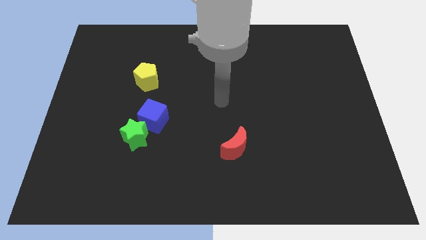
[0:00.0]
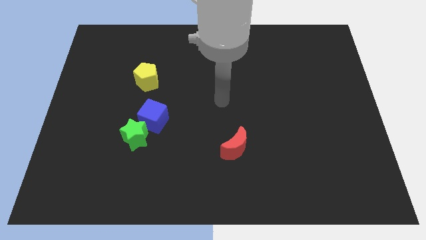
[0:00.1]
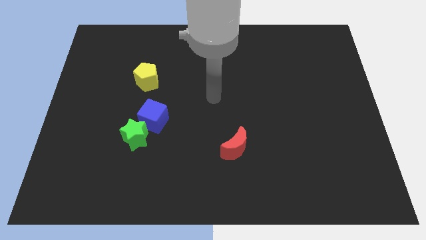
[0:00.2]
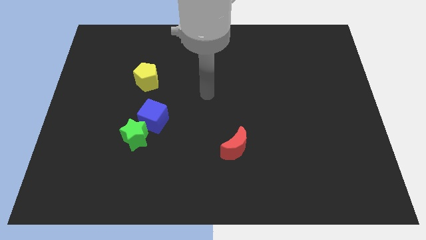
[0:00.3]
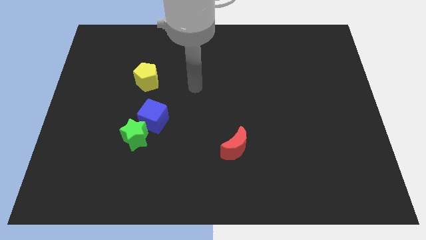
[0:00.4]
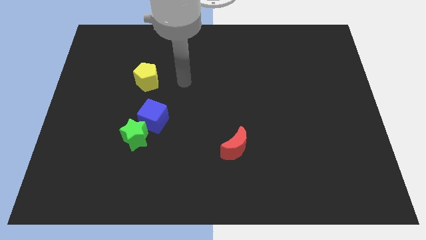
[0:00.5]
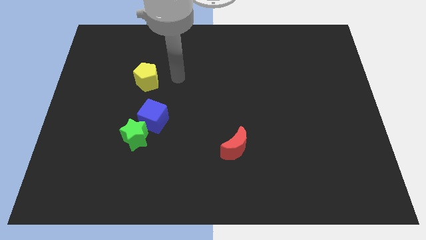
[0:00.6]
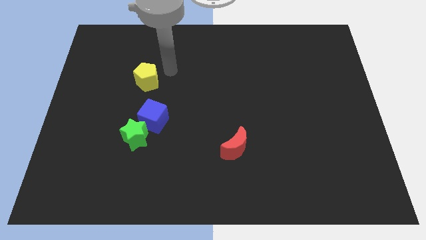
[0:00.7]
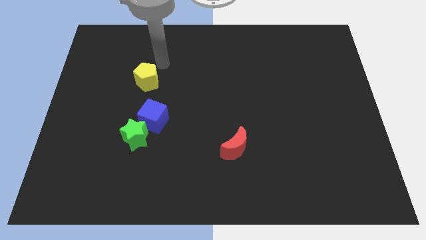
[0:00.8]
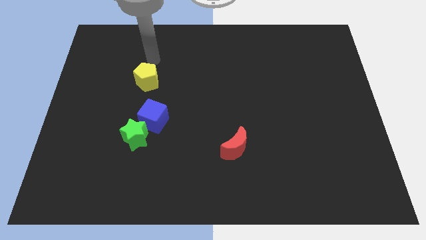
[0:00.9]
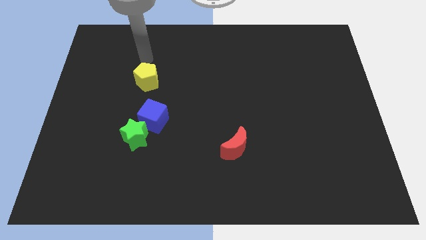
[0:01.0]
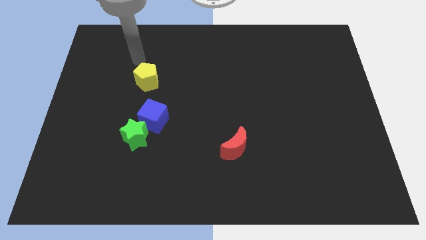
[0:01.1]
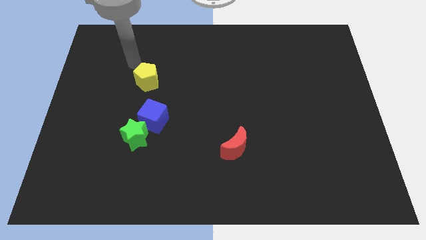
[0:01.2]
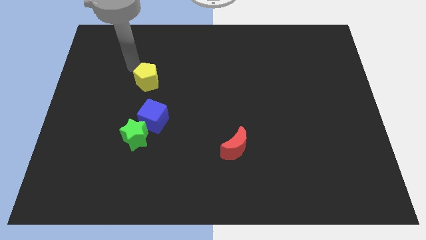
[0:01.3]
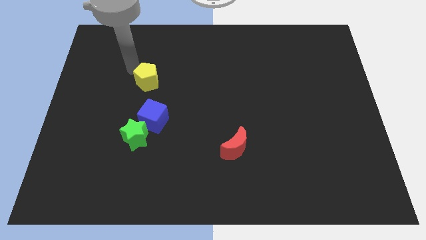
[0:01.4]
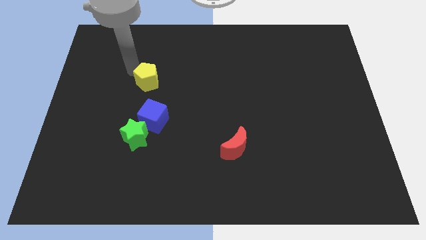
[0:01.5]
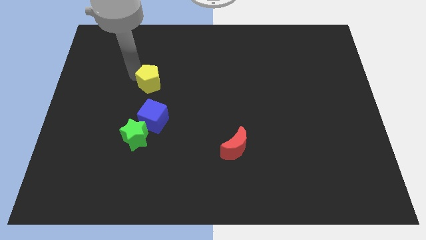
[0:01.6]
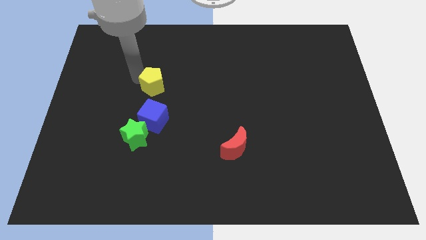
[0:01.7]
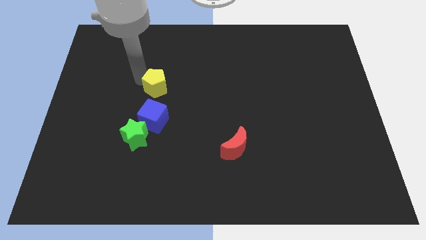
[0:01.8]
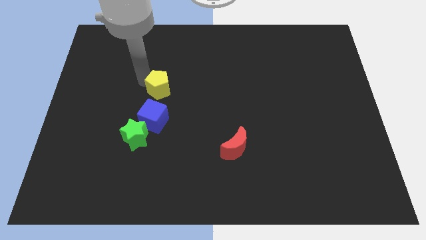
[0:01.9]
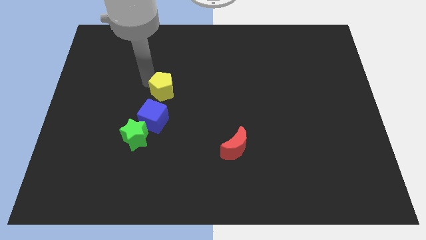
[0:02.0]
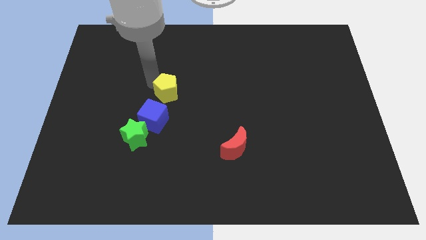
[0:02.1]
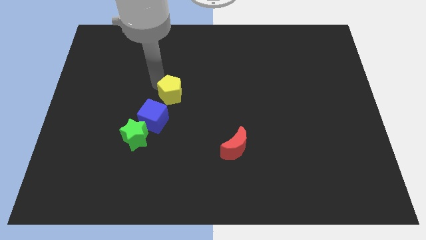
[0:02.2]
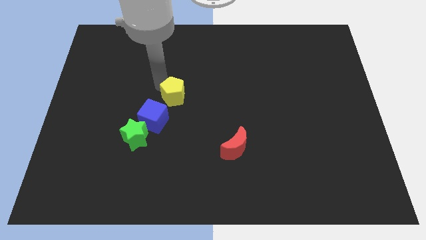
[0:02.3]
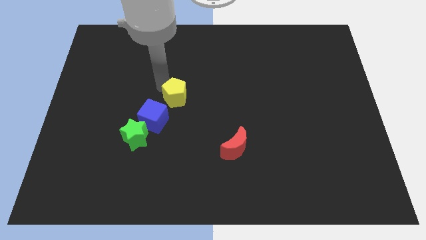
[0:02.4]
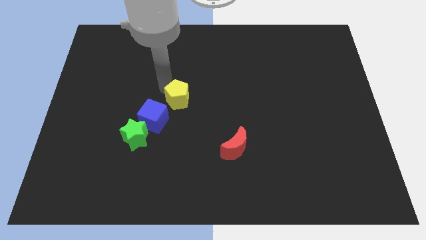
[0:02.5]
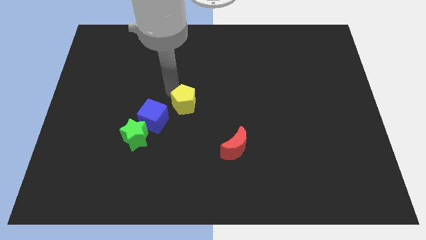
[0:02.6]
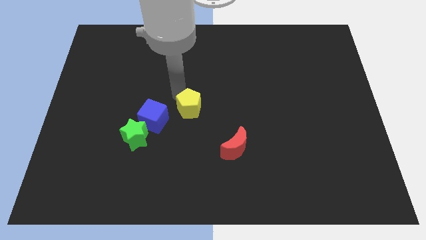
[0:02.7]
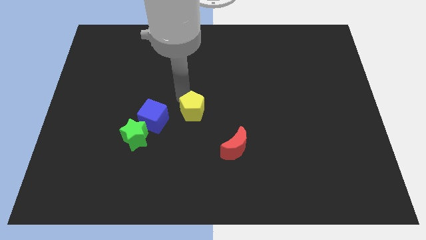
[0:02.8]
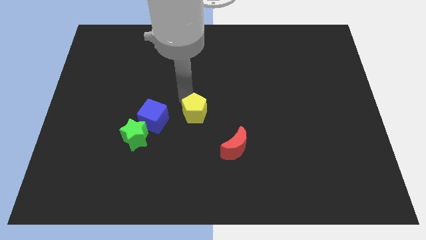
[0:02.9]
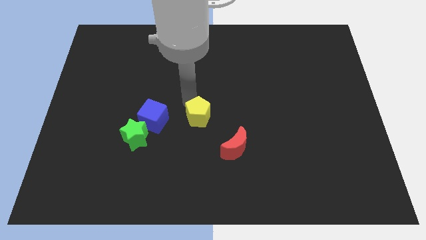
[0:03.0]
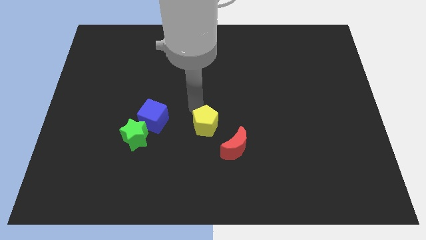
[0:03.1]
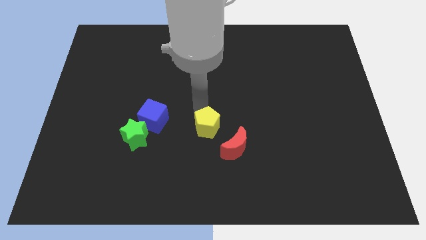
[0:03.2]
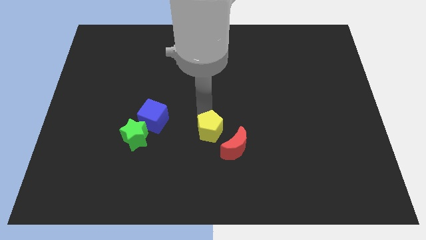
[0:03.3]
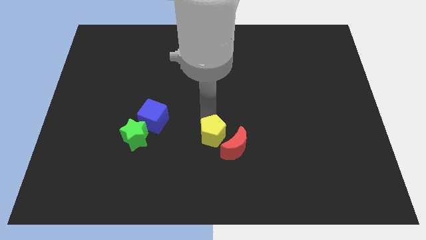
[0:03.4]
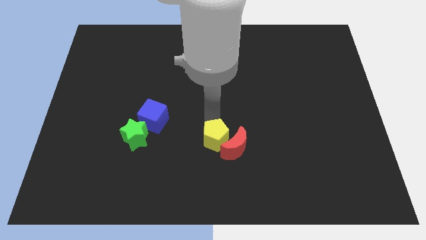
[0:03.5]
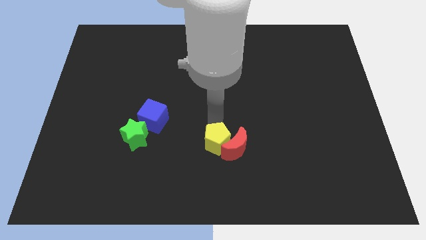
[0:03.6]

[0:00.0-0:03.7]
move the yellow pentagon next to the moon

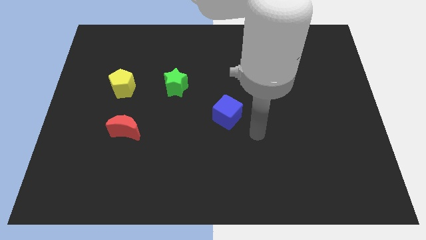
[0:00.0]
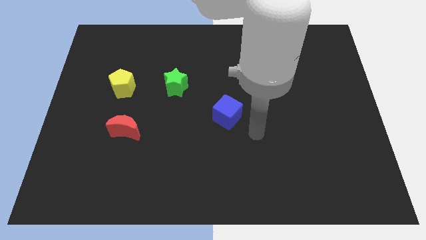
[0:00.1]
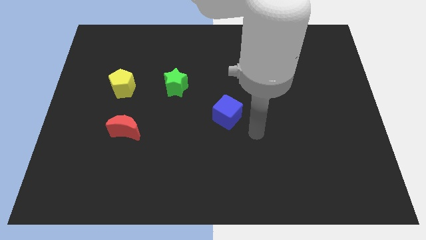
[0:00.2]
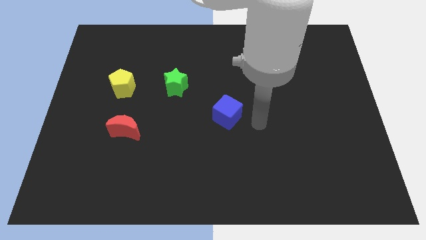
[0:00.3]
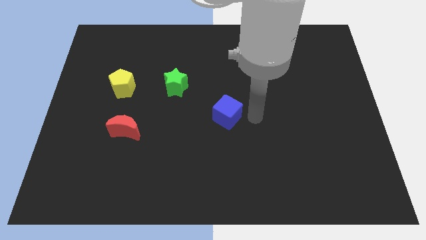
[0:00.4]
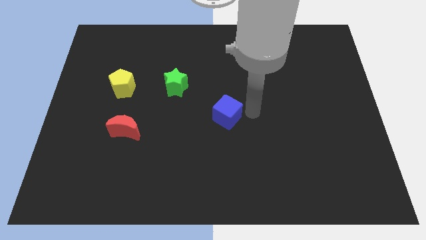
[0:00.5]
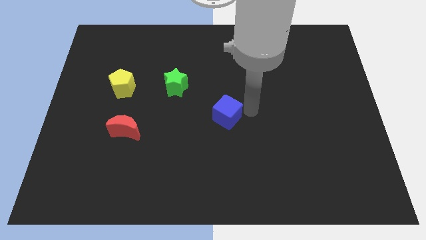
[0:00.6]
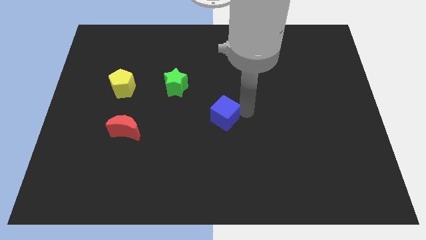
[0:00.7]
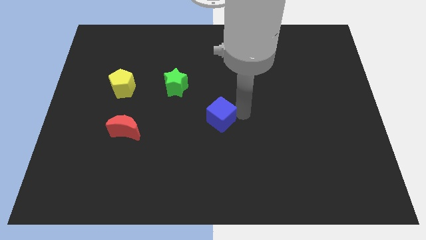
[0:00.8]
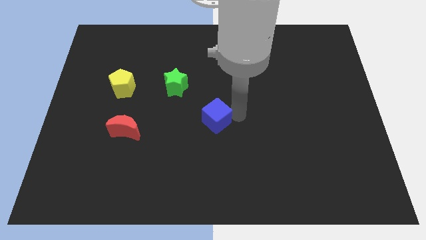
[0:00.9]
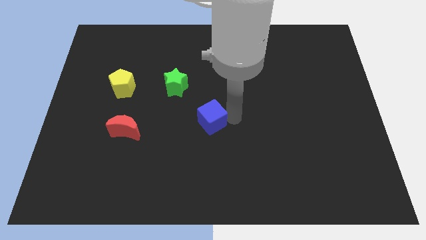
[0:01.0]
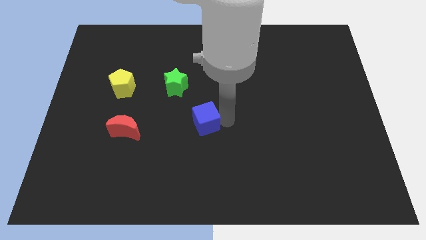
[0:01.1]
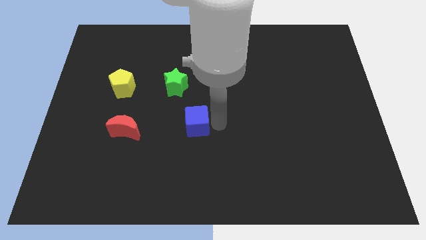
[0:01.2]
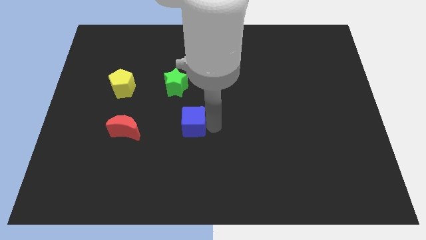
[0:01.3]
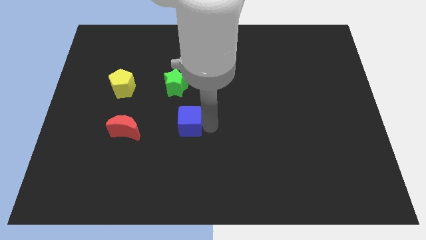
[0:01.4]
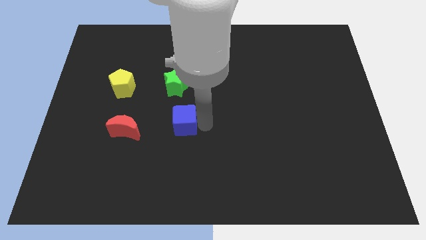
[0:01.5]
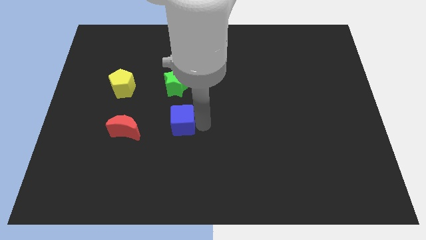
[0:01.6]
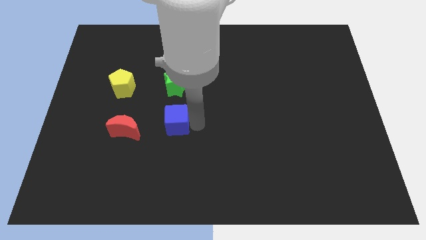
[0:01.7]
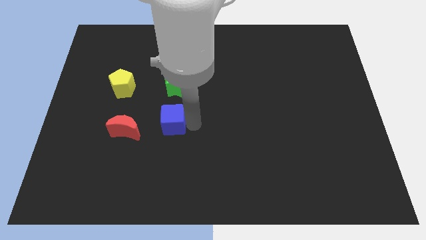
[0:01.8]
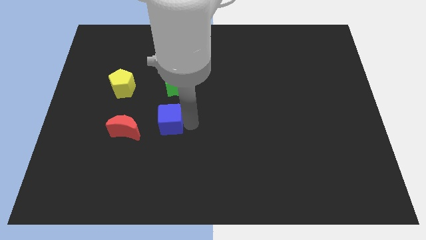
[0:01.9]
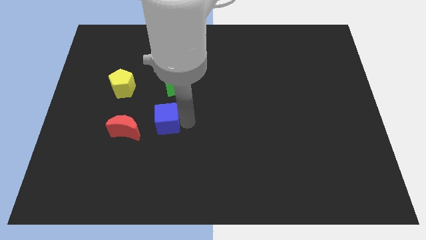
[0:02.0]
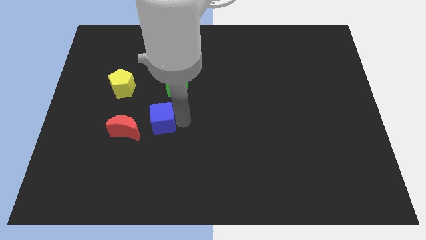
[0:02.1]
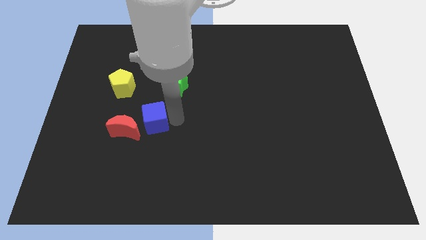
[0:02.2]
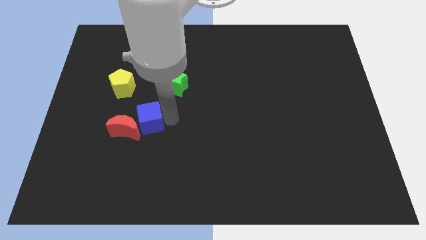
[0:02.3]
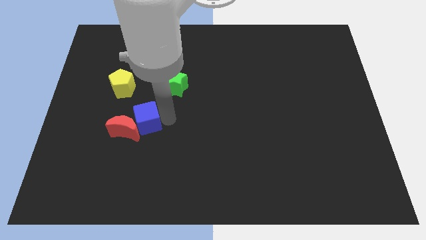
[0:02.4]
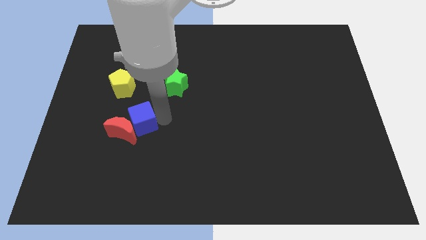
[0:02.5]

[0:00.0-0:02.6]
slide the blue block towards the red block

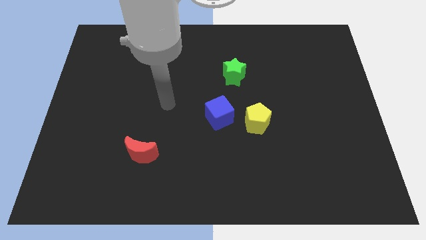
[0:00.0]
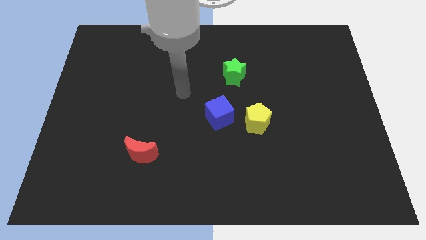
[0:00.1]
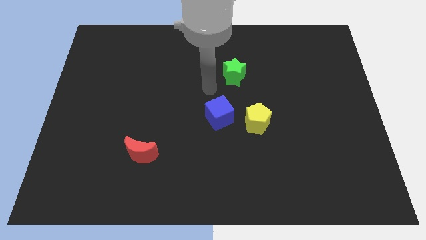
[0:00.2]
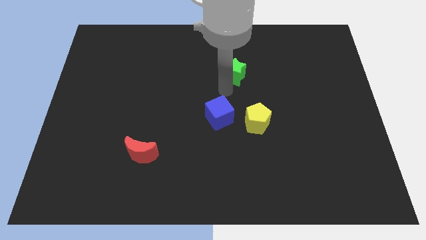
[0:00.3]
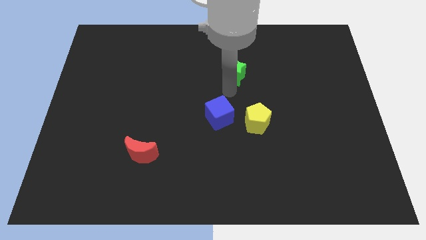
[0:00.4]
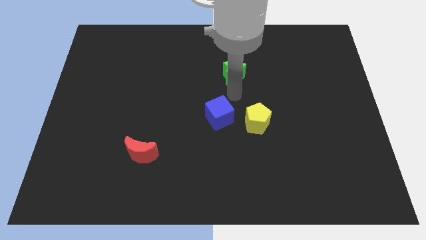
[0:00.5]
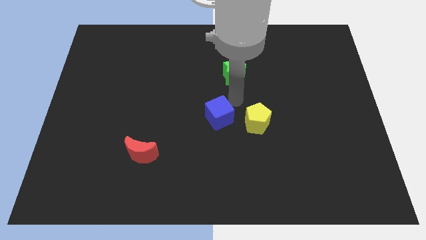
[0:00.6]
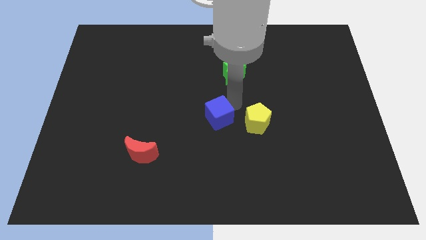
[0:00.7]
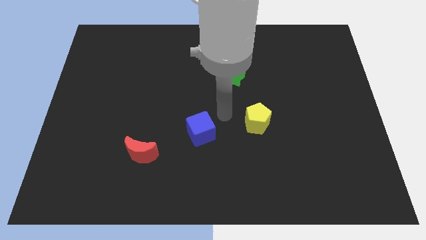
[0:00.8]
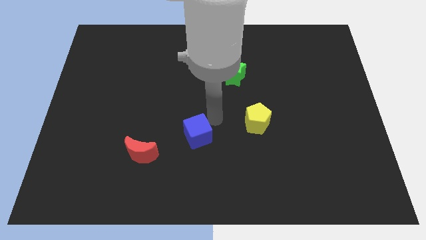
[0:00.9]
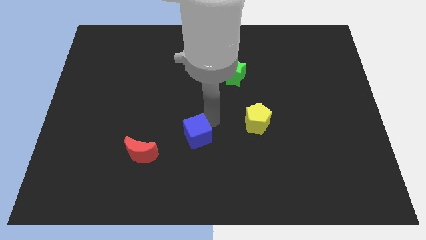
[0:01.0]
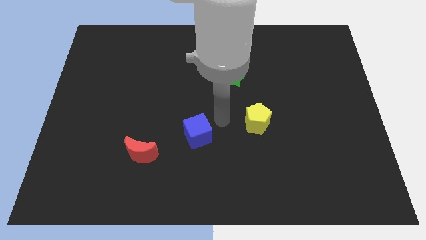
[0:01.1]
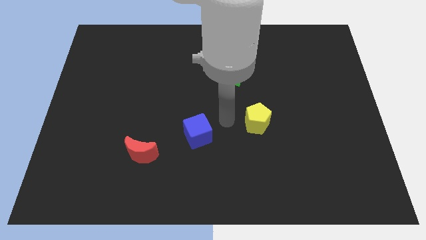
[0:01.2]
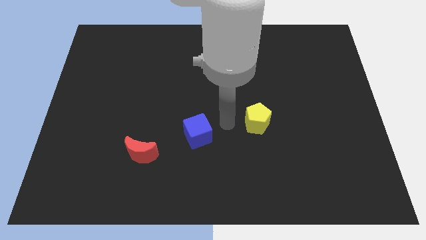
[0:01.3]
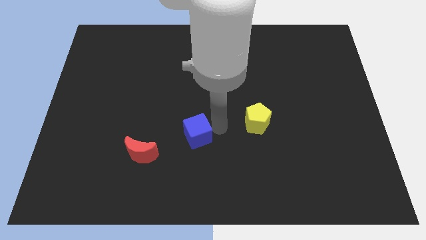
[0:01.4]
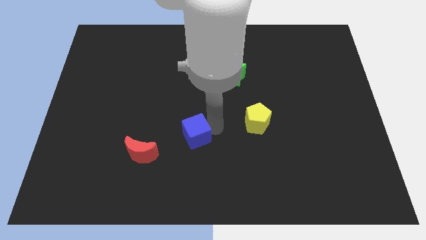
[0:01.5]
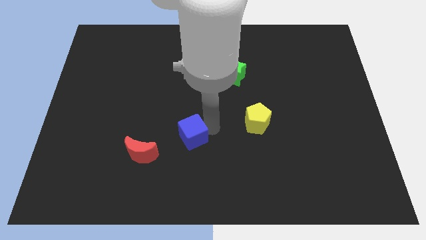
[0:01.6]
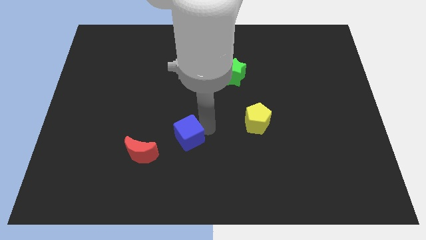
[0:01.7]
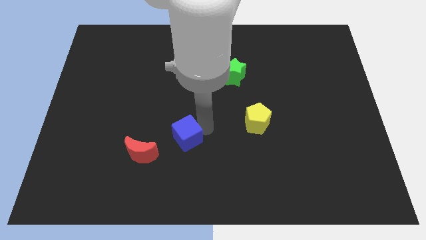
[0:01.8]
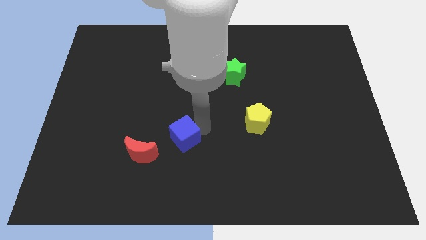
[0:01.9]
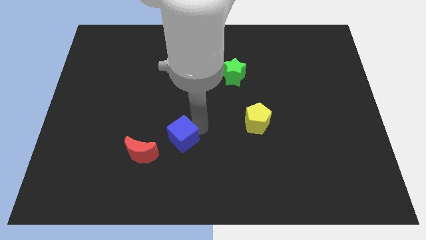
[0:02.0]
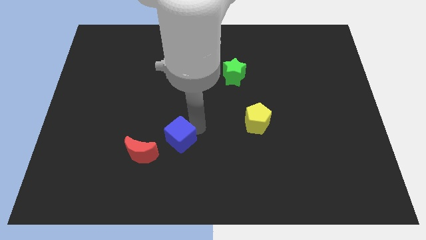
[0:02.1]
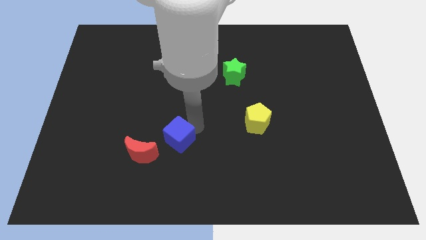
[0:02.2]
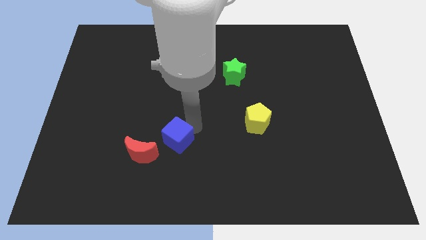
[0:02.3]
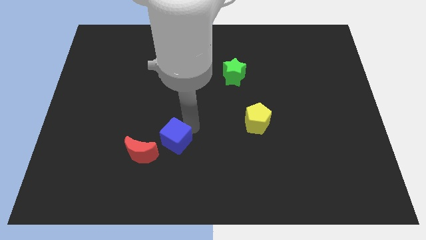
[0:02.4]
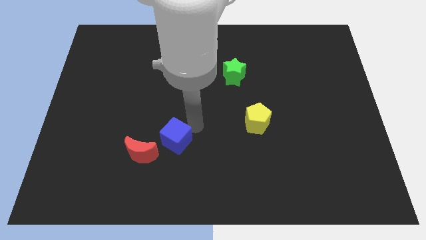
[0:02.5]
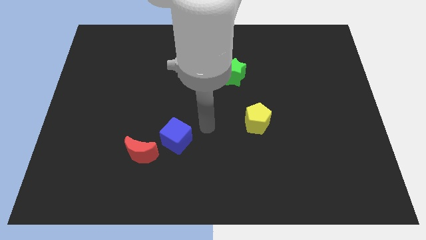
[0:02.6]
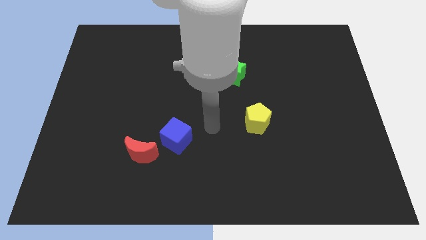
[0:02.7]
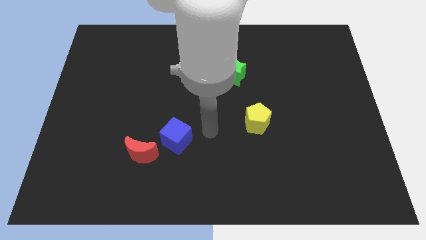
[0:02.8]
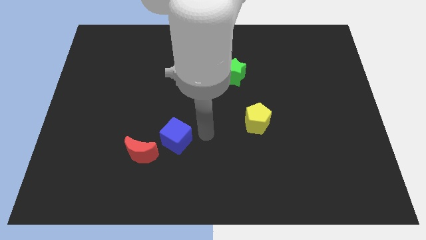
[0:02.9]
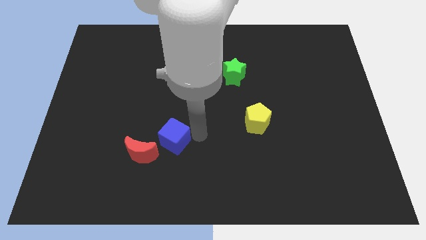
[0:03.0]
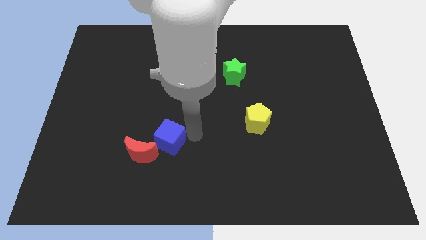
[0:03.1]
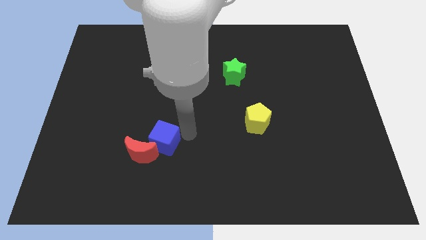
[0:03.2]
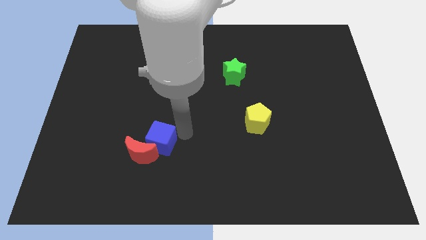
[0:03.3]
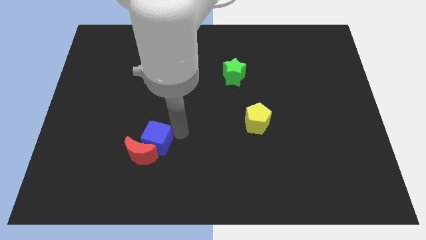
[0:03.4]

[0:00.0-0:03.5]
move the blue block close to the red moon
